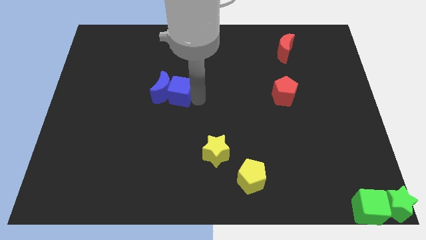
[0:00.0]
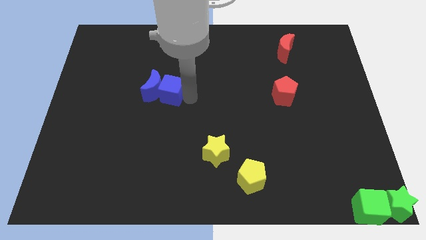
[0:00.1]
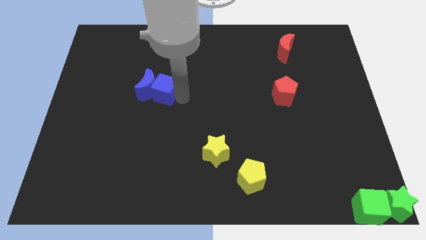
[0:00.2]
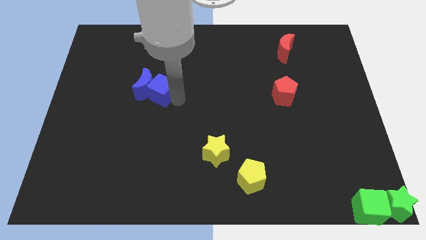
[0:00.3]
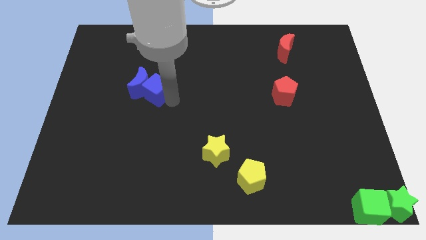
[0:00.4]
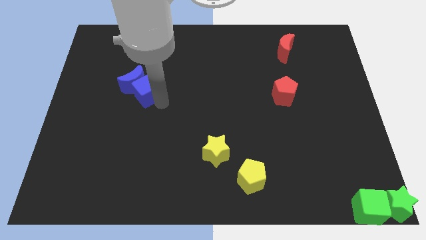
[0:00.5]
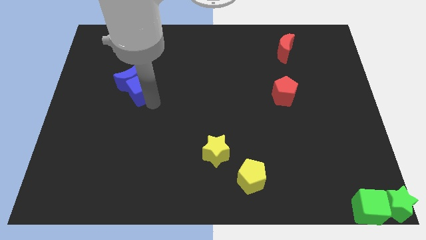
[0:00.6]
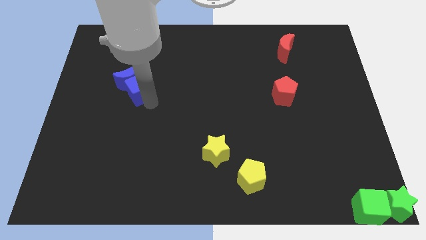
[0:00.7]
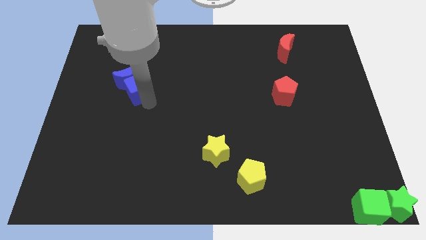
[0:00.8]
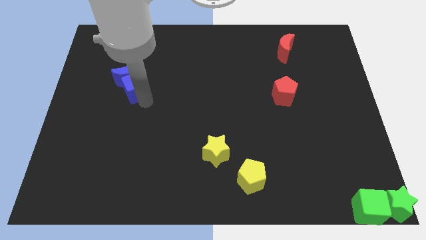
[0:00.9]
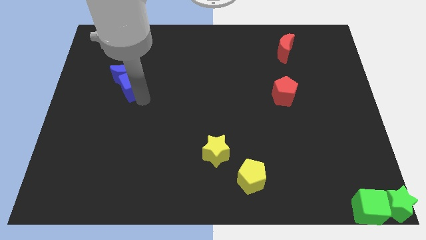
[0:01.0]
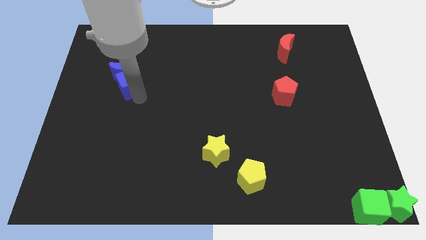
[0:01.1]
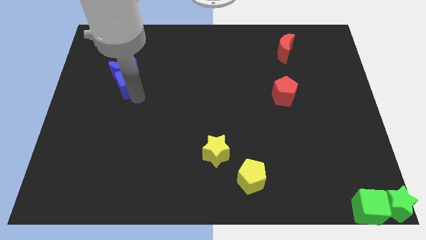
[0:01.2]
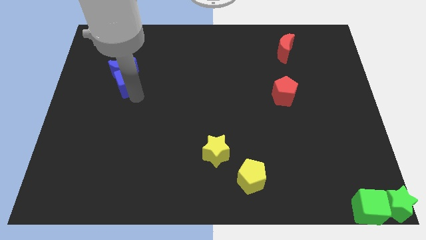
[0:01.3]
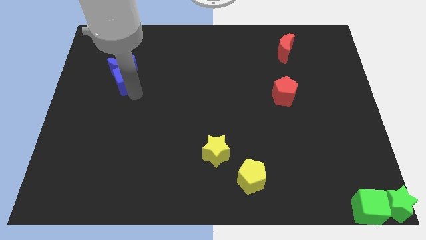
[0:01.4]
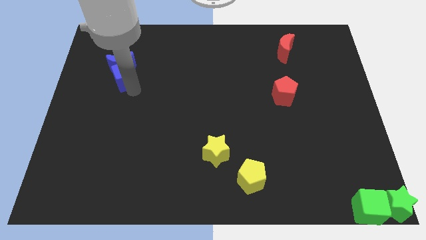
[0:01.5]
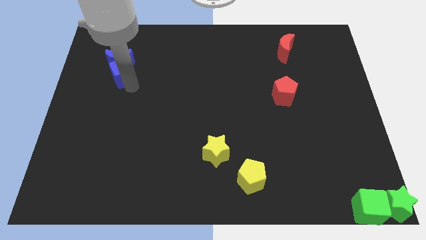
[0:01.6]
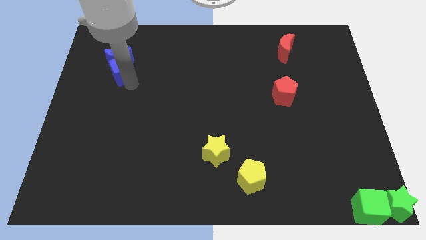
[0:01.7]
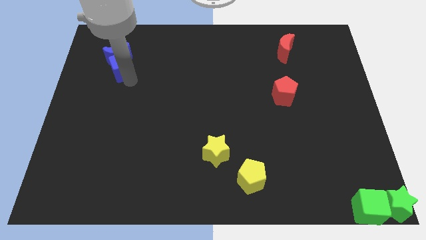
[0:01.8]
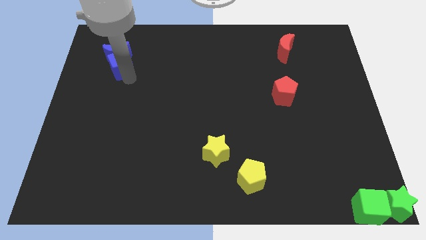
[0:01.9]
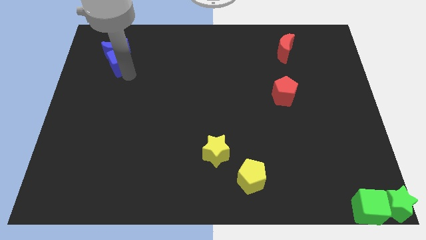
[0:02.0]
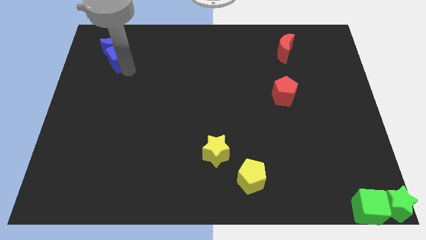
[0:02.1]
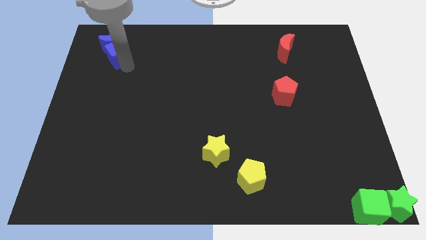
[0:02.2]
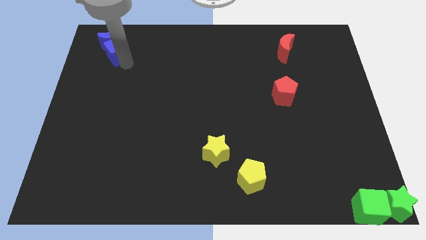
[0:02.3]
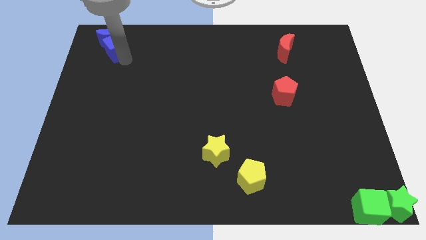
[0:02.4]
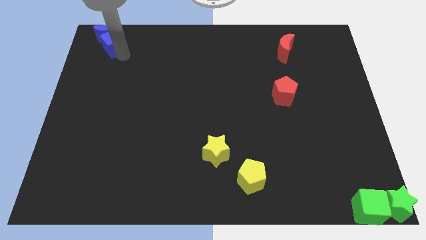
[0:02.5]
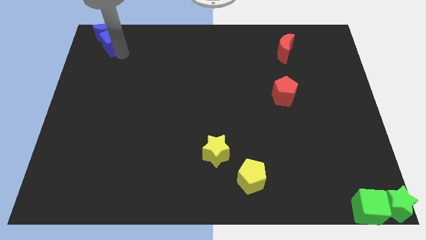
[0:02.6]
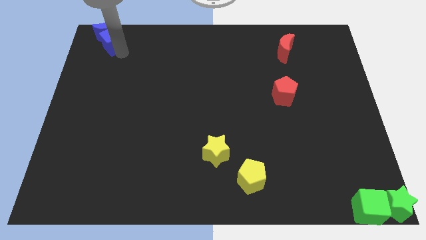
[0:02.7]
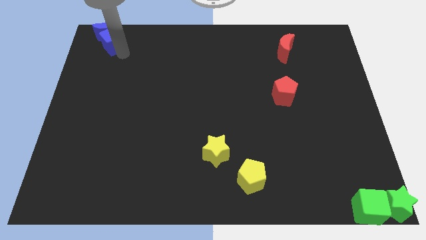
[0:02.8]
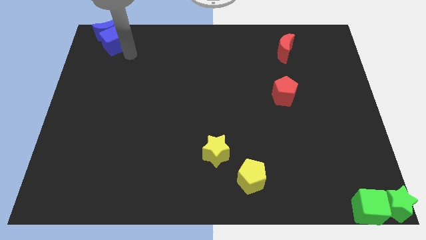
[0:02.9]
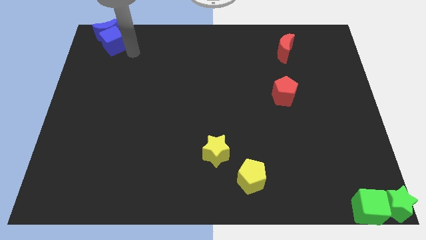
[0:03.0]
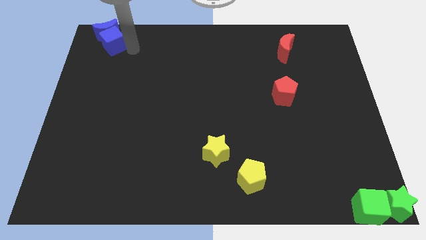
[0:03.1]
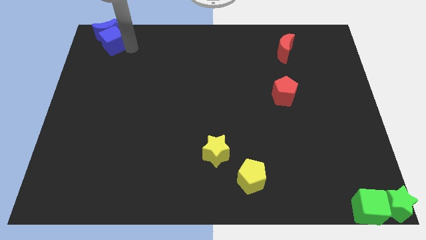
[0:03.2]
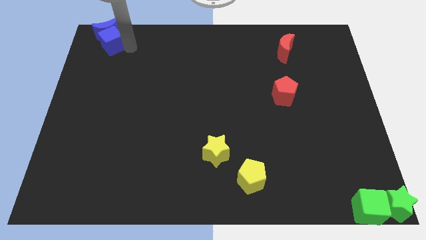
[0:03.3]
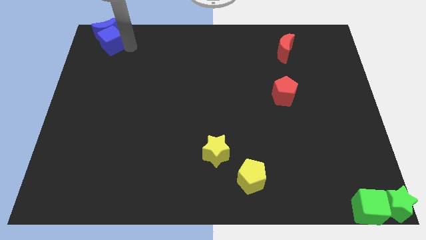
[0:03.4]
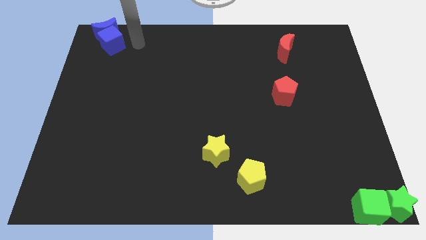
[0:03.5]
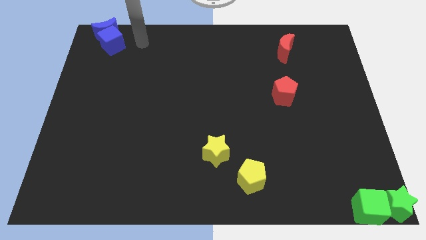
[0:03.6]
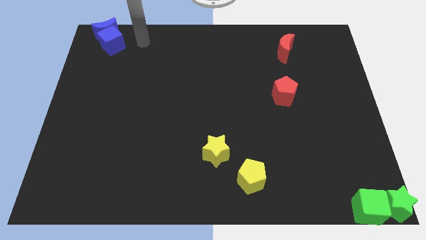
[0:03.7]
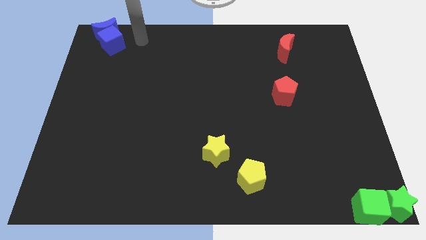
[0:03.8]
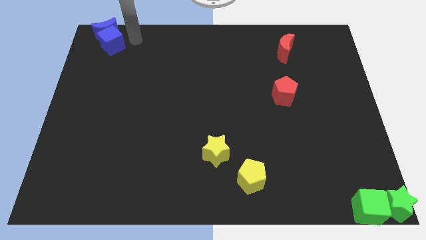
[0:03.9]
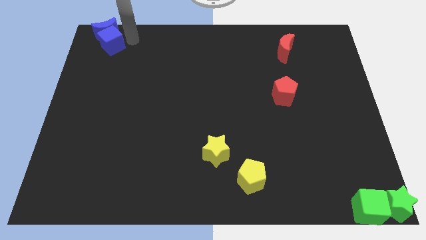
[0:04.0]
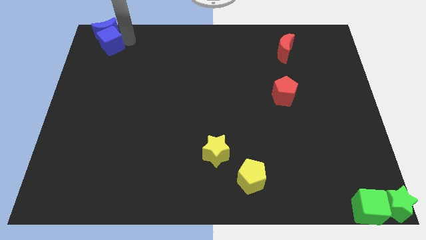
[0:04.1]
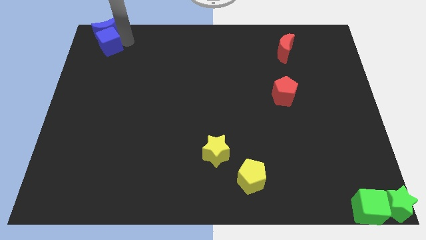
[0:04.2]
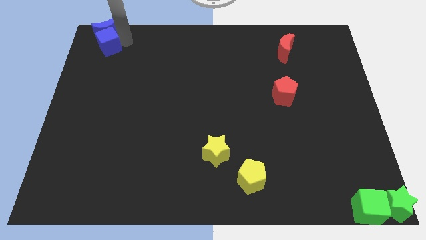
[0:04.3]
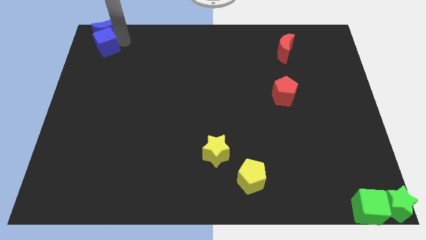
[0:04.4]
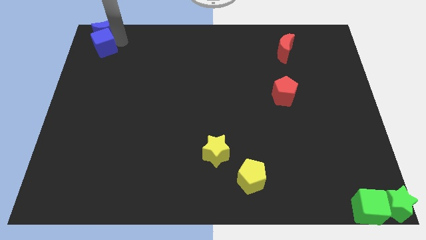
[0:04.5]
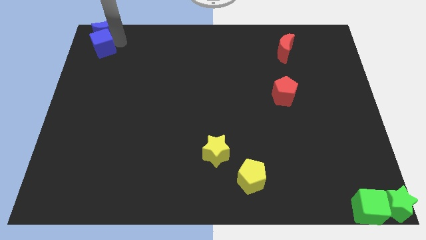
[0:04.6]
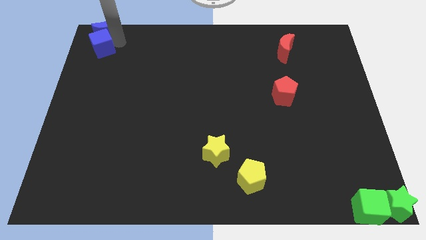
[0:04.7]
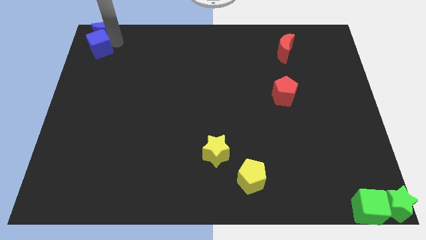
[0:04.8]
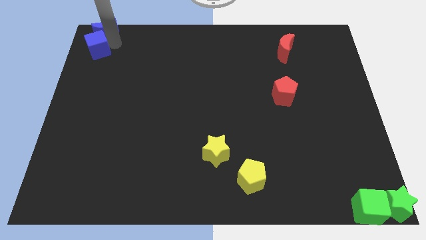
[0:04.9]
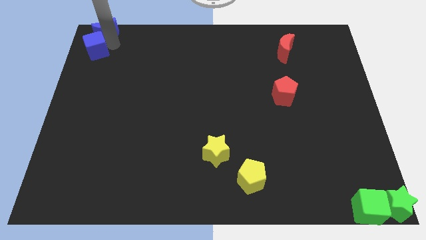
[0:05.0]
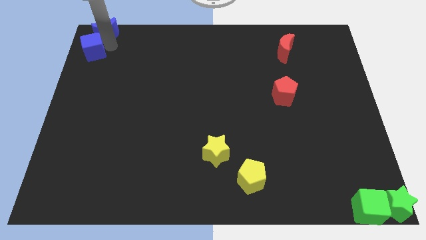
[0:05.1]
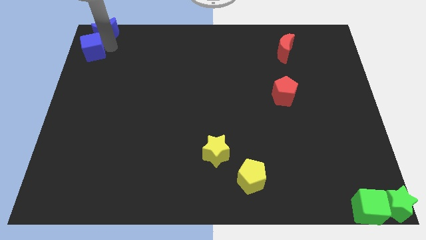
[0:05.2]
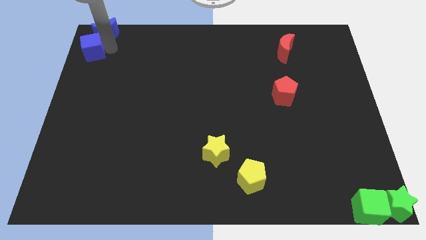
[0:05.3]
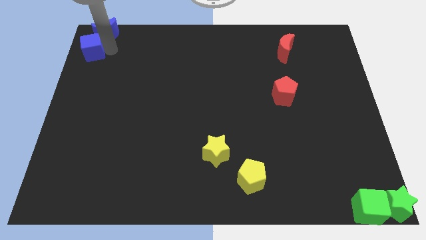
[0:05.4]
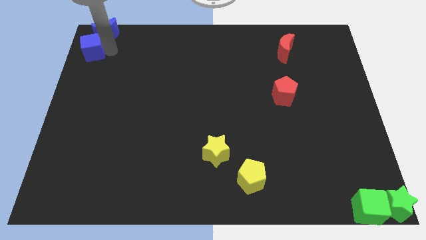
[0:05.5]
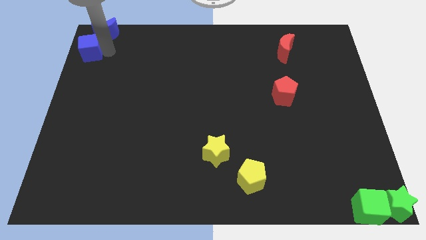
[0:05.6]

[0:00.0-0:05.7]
move the blue blocks to the top left corner of the board

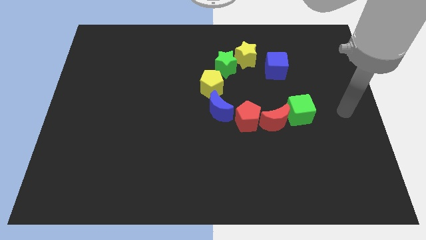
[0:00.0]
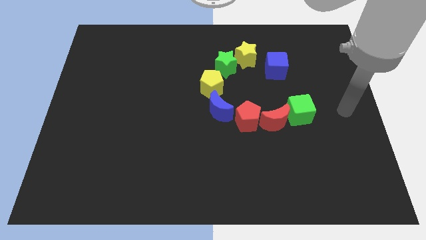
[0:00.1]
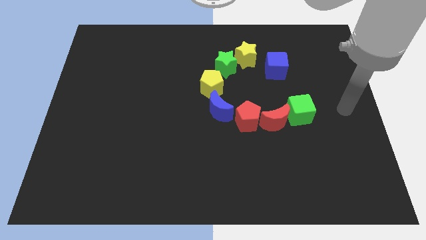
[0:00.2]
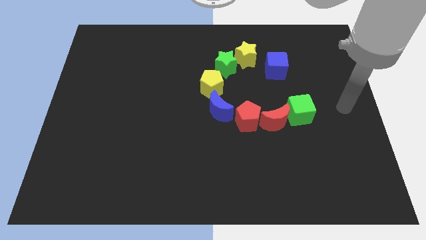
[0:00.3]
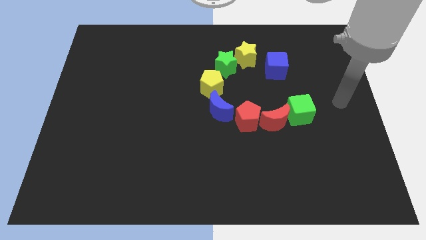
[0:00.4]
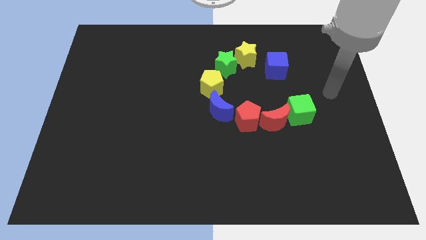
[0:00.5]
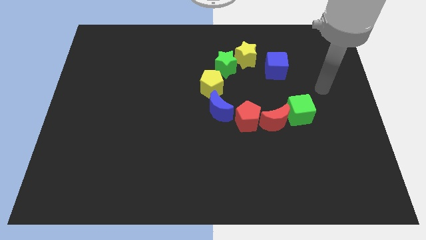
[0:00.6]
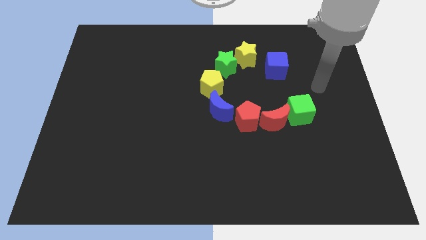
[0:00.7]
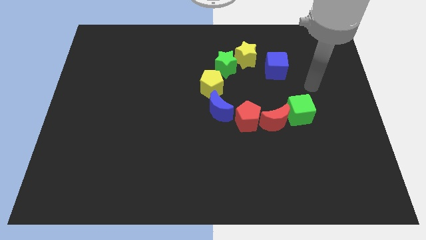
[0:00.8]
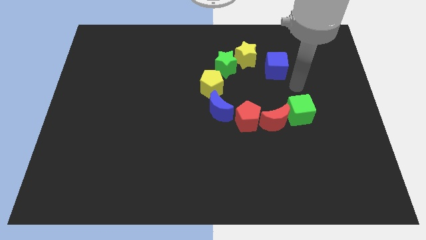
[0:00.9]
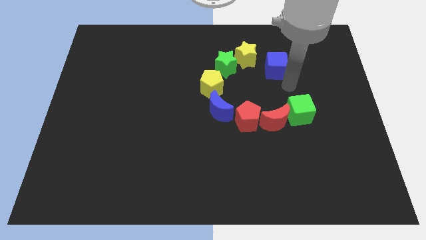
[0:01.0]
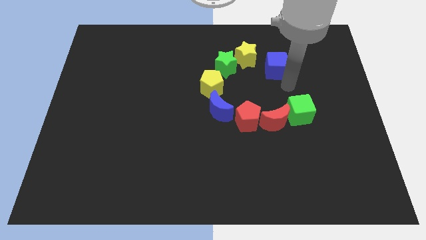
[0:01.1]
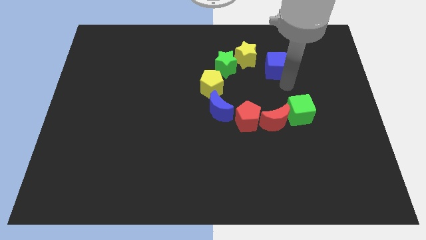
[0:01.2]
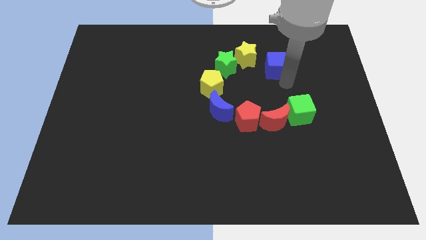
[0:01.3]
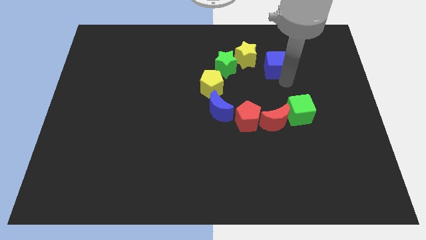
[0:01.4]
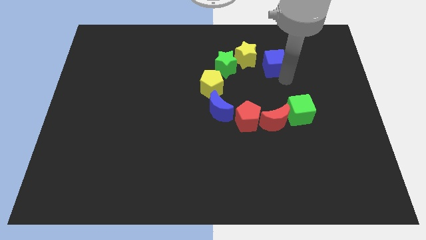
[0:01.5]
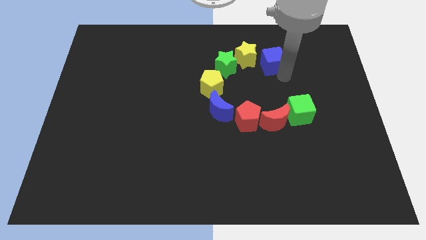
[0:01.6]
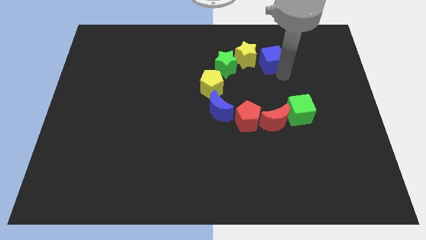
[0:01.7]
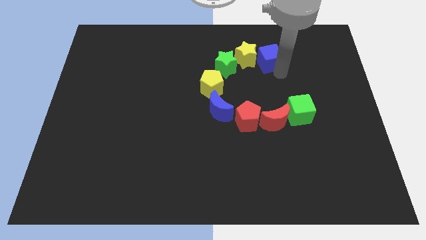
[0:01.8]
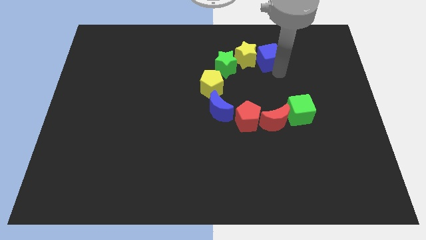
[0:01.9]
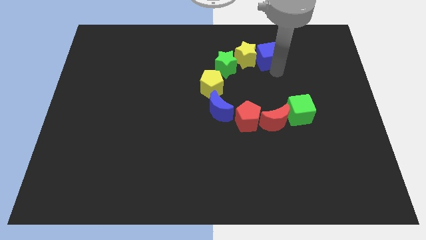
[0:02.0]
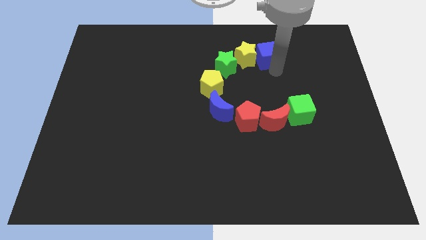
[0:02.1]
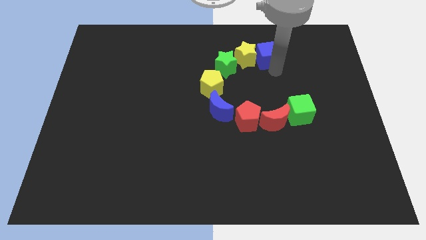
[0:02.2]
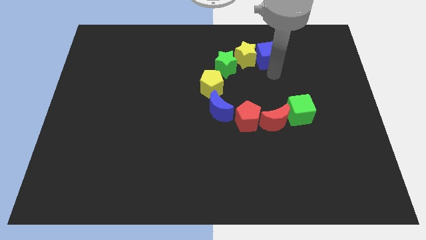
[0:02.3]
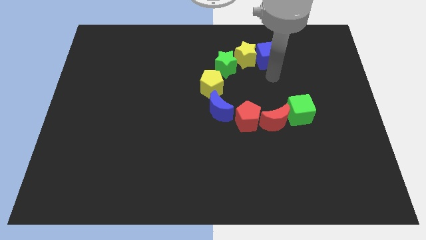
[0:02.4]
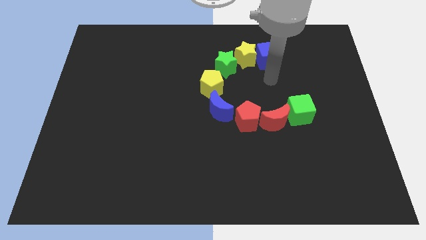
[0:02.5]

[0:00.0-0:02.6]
move blue cube slightly up

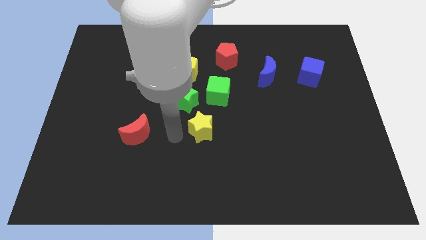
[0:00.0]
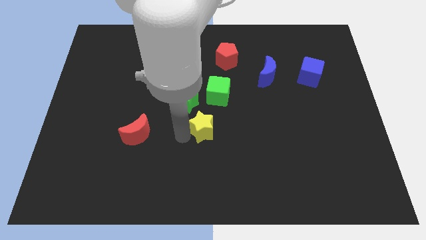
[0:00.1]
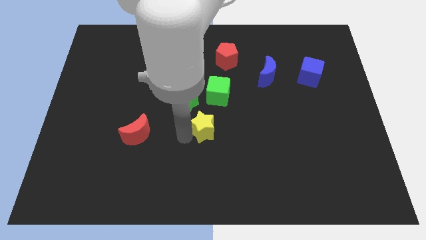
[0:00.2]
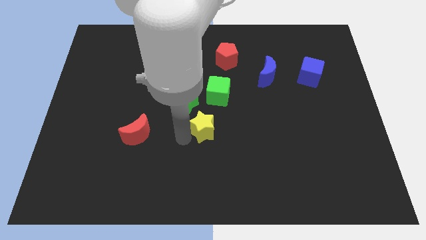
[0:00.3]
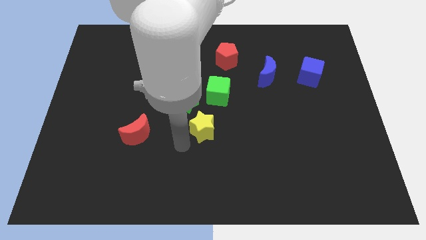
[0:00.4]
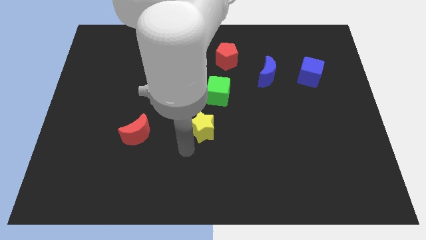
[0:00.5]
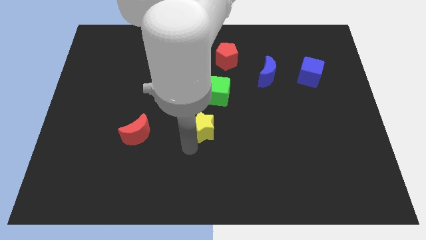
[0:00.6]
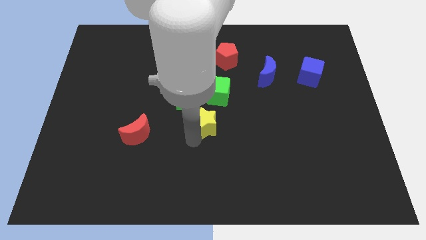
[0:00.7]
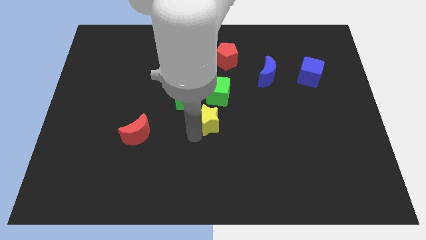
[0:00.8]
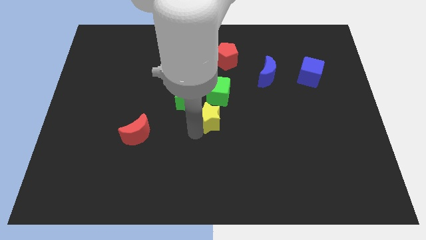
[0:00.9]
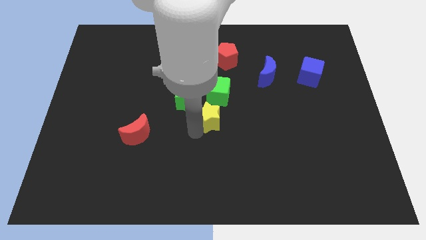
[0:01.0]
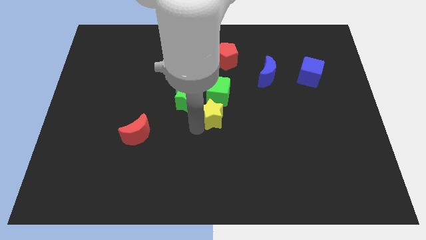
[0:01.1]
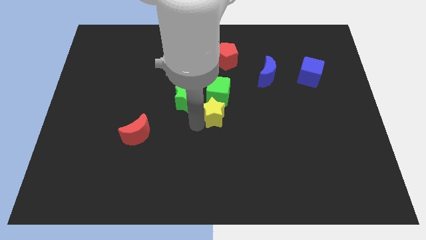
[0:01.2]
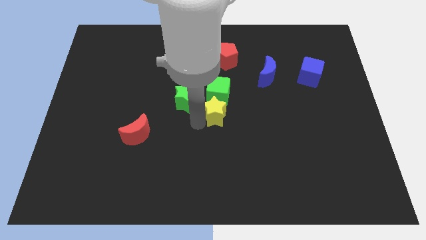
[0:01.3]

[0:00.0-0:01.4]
push the yellow star to the bottom of the green cube
